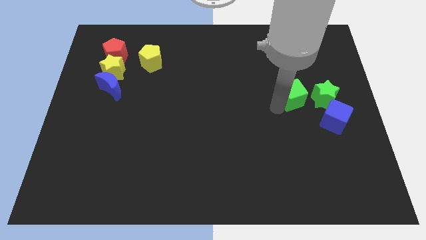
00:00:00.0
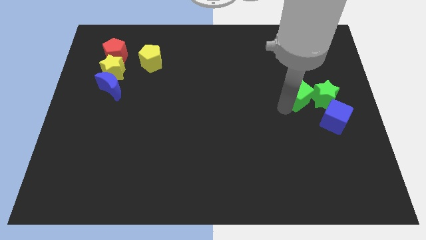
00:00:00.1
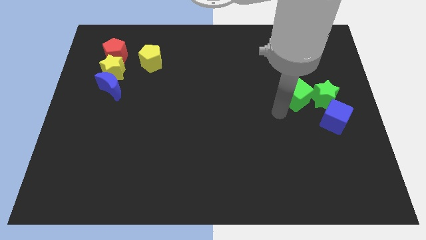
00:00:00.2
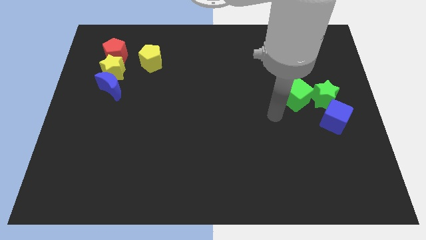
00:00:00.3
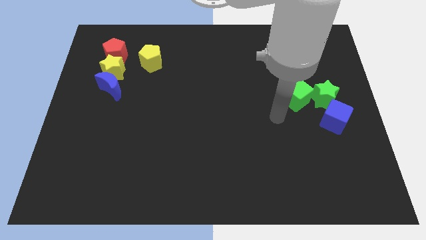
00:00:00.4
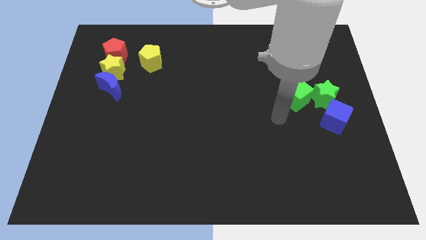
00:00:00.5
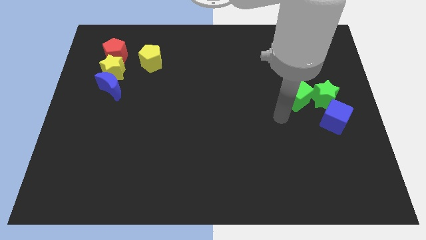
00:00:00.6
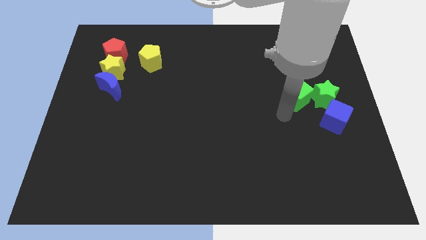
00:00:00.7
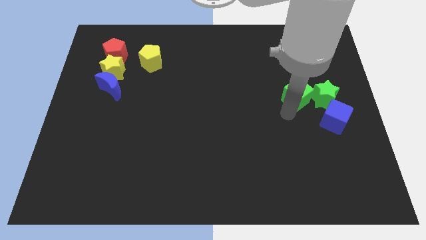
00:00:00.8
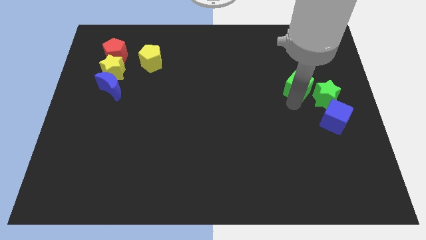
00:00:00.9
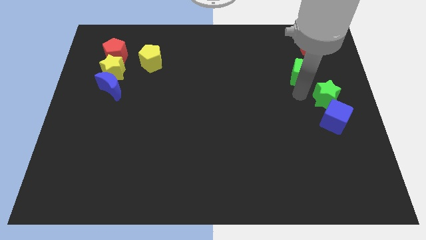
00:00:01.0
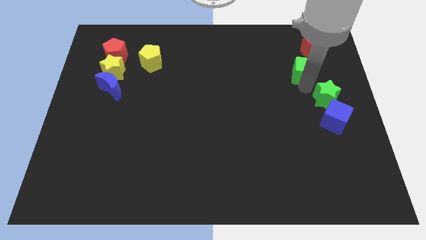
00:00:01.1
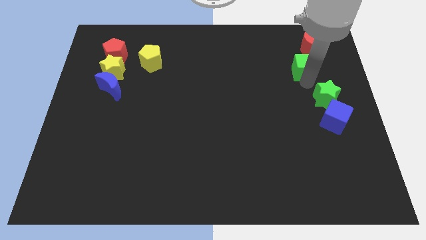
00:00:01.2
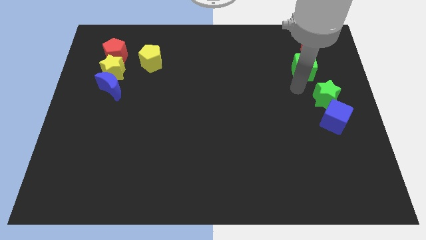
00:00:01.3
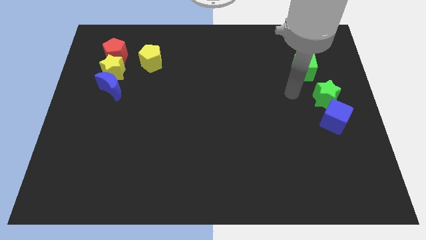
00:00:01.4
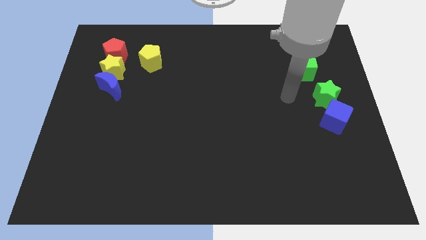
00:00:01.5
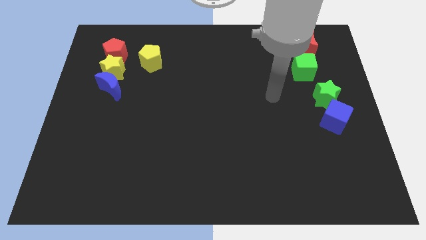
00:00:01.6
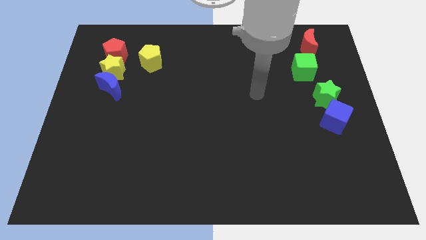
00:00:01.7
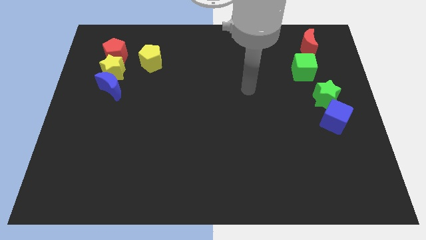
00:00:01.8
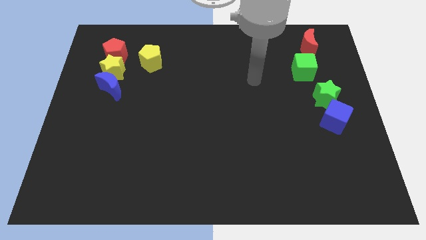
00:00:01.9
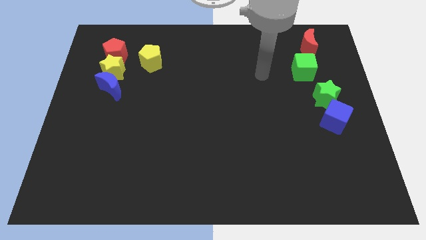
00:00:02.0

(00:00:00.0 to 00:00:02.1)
place green cube below the red moon

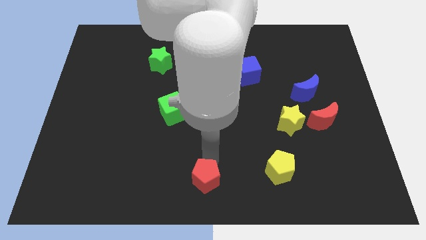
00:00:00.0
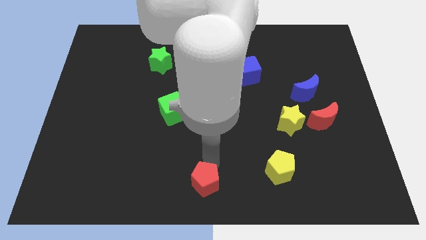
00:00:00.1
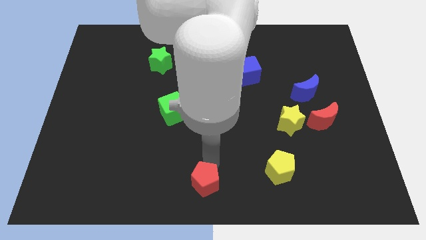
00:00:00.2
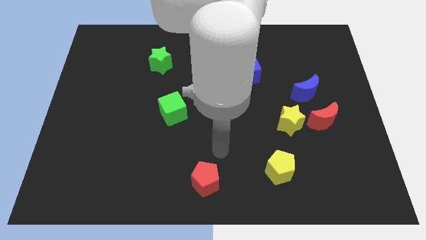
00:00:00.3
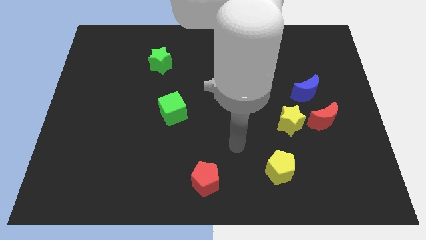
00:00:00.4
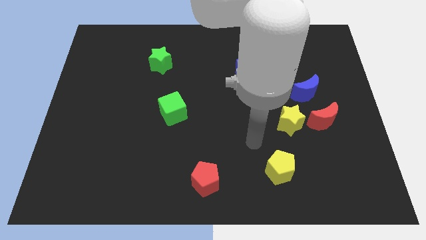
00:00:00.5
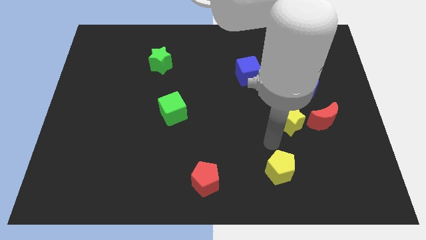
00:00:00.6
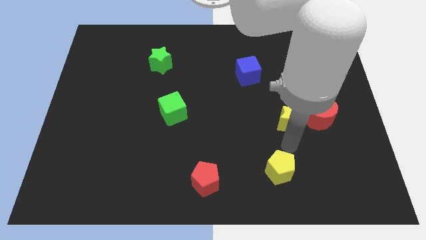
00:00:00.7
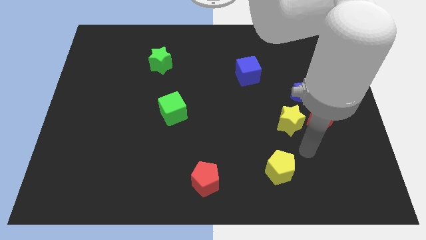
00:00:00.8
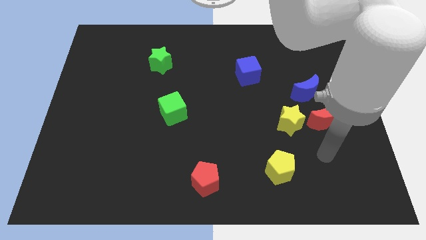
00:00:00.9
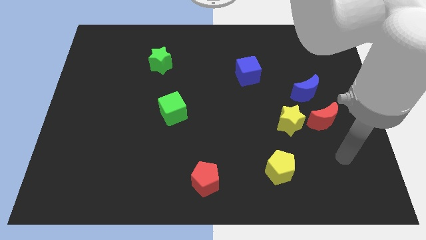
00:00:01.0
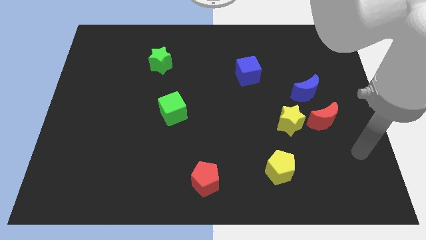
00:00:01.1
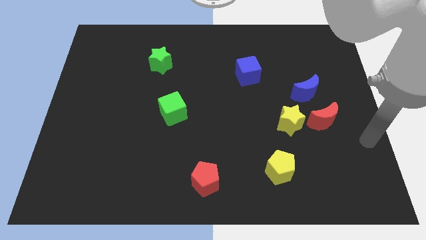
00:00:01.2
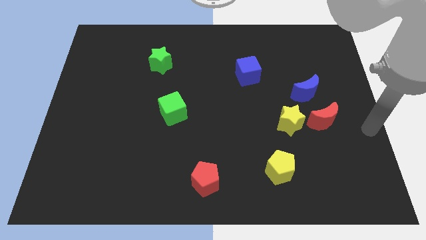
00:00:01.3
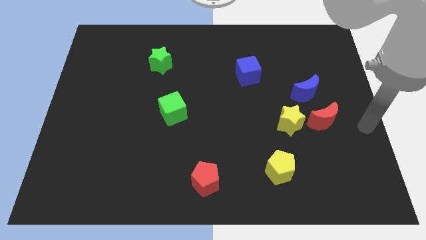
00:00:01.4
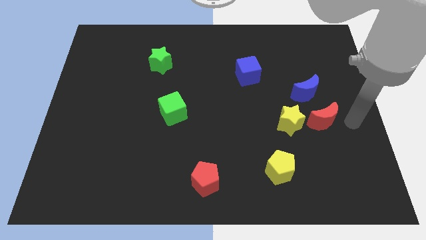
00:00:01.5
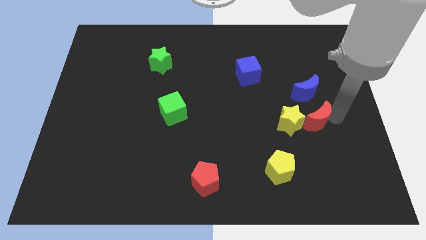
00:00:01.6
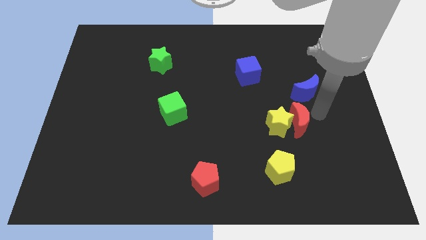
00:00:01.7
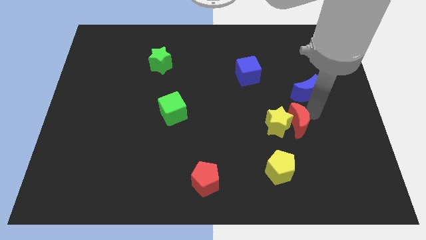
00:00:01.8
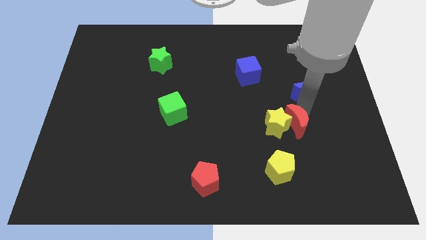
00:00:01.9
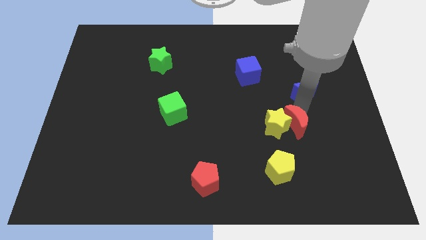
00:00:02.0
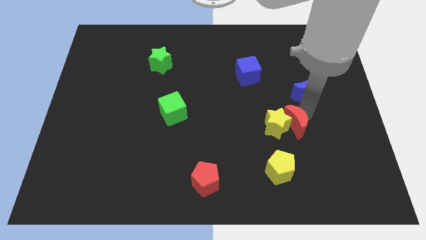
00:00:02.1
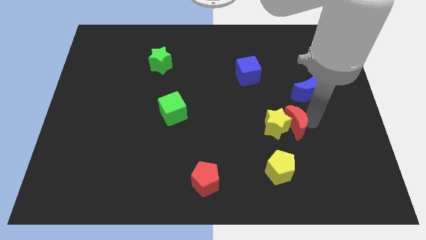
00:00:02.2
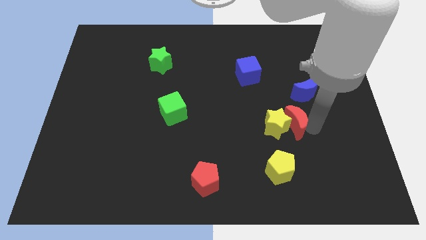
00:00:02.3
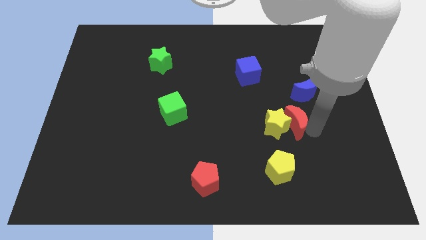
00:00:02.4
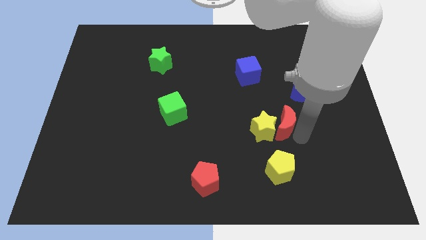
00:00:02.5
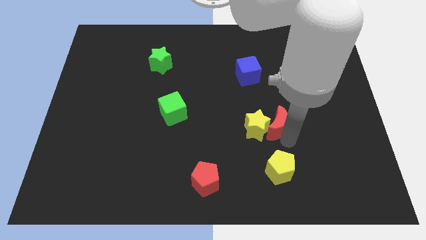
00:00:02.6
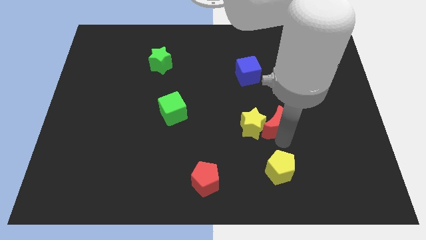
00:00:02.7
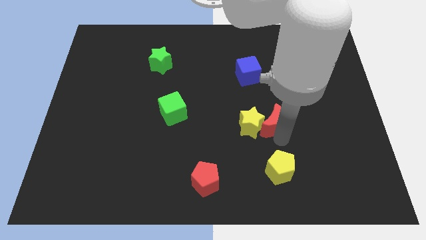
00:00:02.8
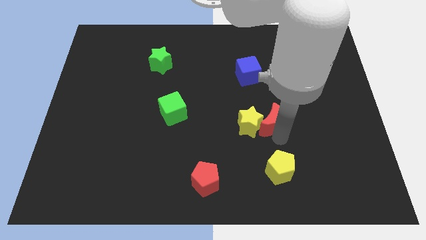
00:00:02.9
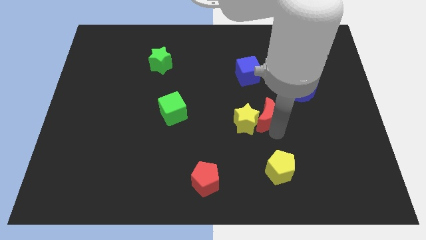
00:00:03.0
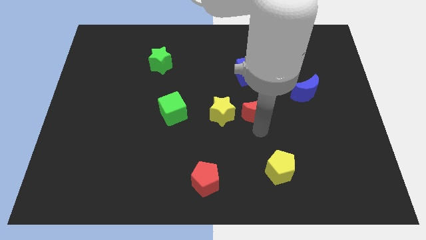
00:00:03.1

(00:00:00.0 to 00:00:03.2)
push the red moon into the yellow star

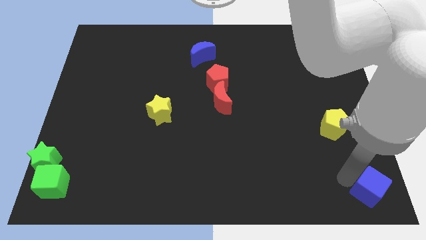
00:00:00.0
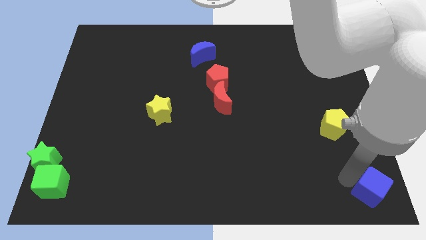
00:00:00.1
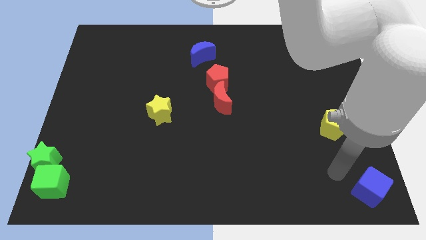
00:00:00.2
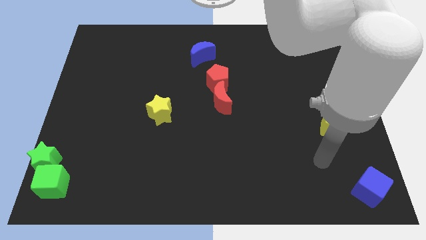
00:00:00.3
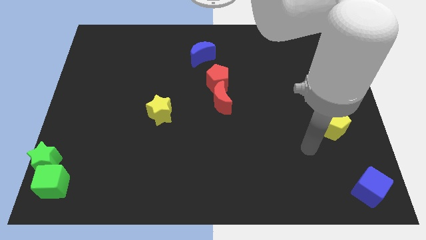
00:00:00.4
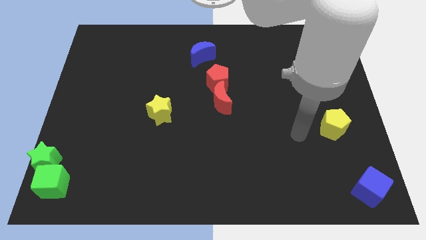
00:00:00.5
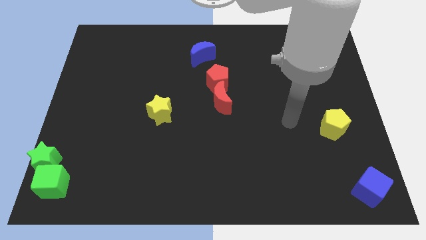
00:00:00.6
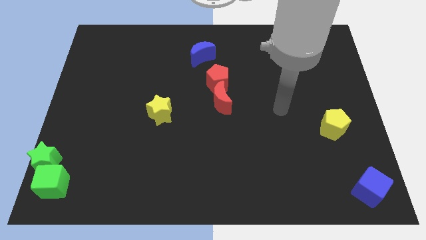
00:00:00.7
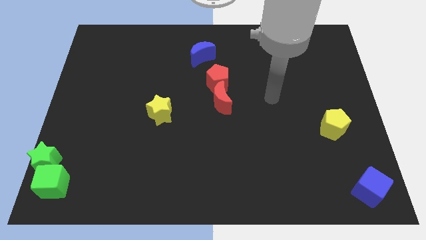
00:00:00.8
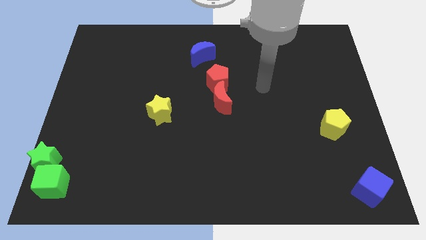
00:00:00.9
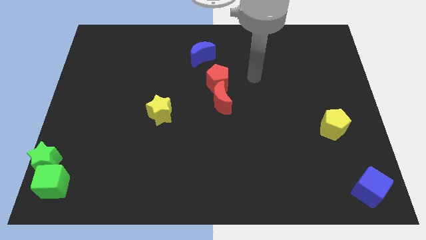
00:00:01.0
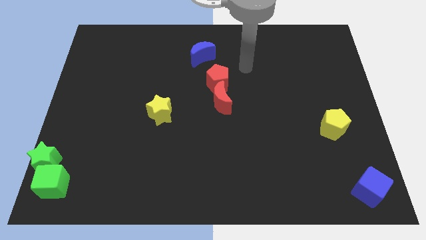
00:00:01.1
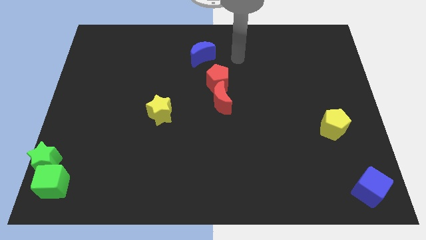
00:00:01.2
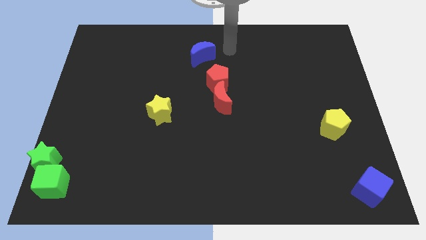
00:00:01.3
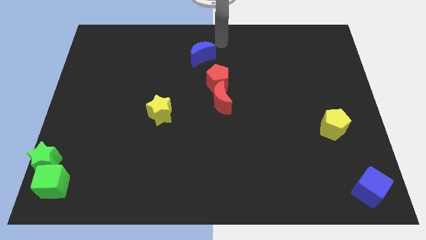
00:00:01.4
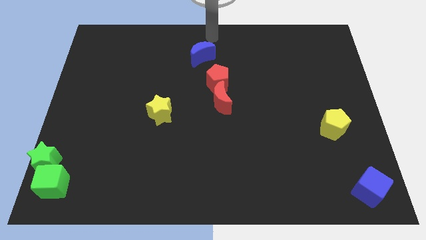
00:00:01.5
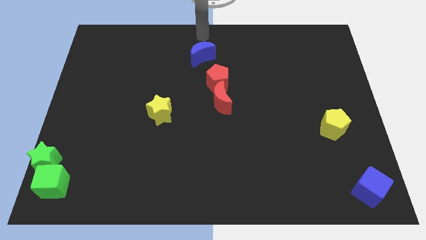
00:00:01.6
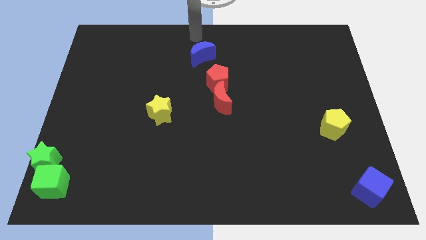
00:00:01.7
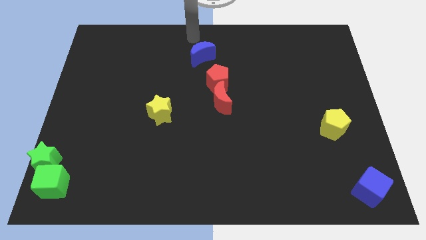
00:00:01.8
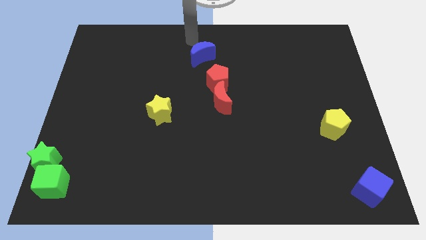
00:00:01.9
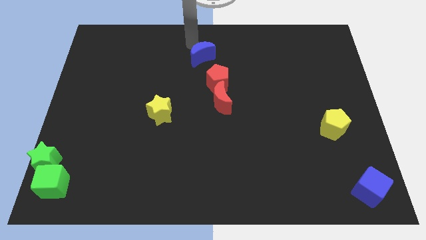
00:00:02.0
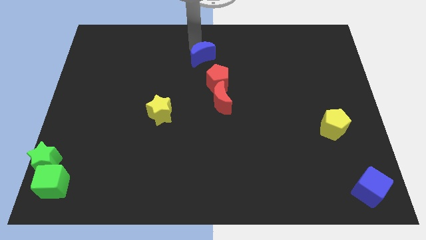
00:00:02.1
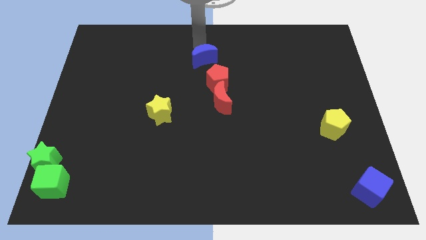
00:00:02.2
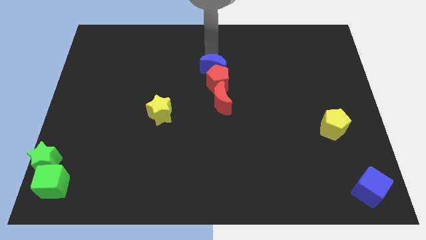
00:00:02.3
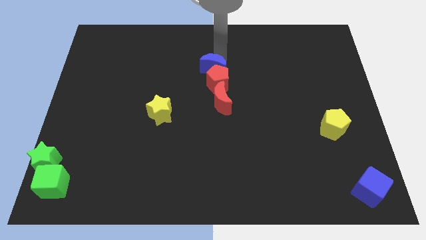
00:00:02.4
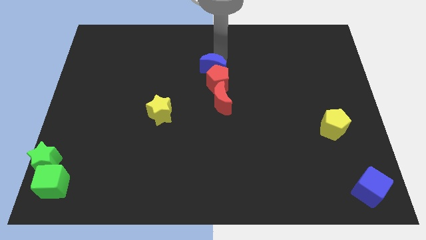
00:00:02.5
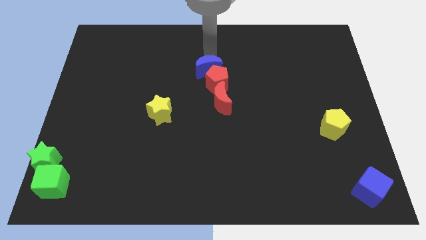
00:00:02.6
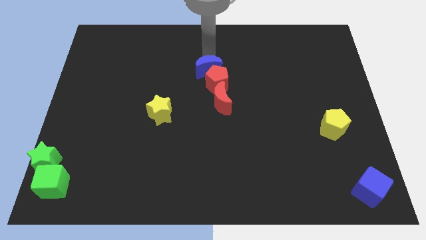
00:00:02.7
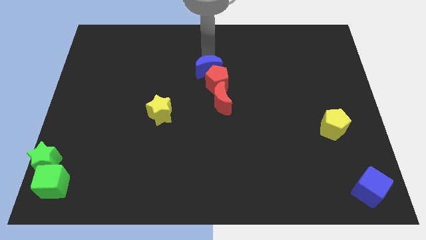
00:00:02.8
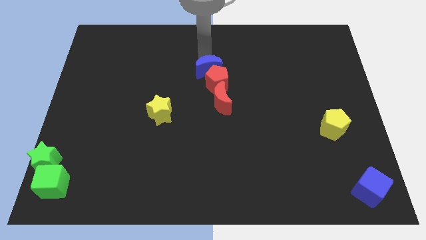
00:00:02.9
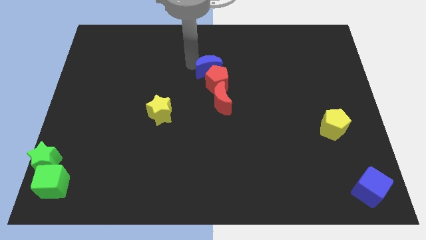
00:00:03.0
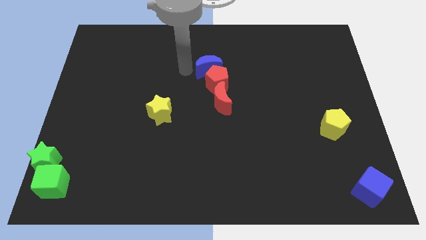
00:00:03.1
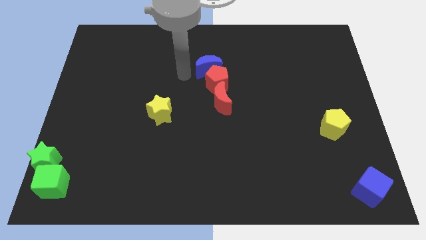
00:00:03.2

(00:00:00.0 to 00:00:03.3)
place the blue moon above the red pentagon

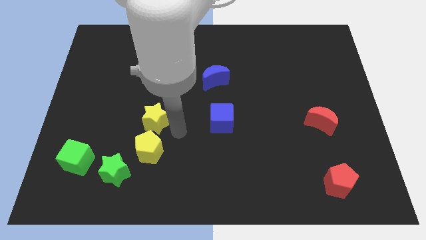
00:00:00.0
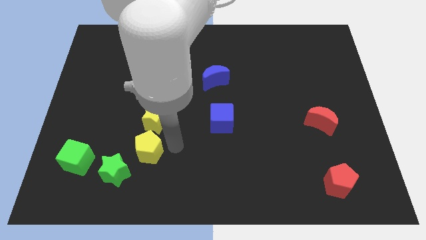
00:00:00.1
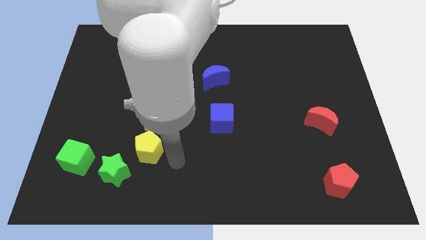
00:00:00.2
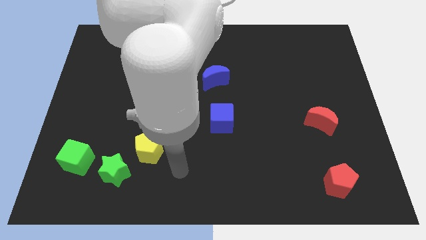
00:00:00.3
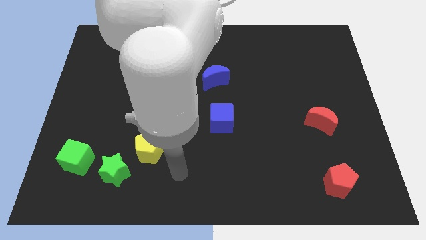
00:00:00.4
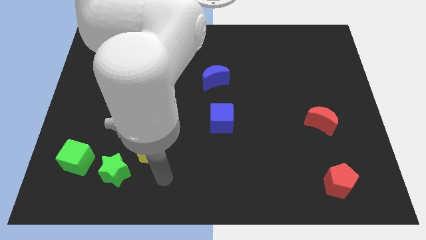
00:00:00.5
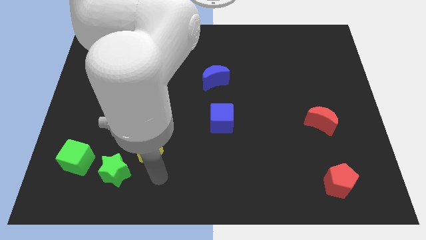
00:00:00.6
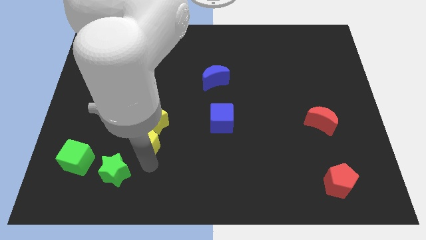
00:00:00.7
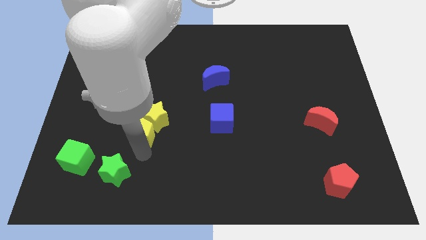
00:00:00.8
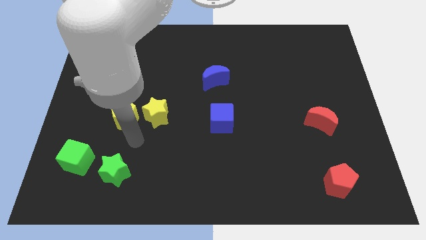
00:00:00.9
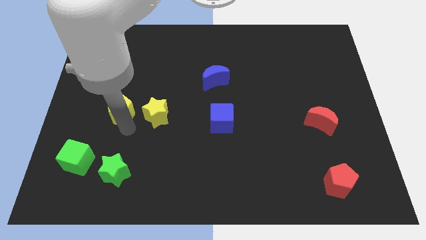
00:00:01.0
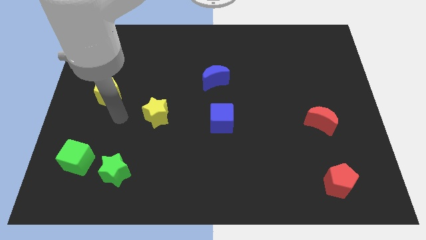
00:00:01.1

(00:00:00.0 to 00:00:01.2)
separate yellow pentagon from yellow star
